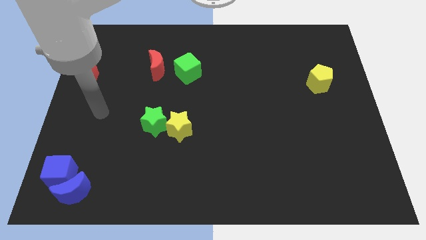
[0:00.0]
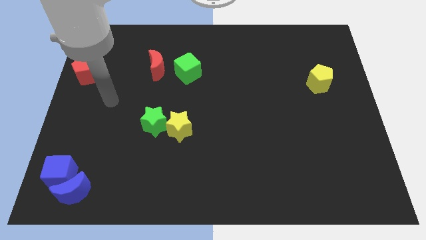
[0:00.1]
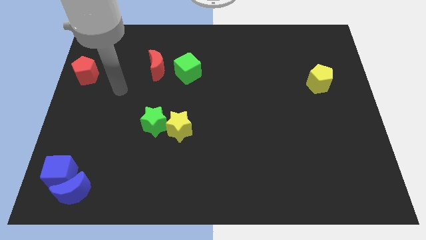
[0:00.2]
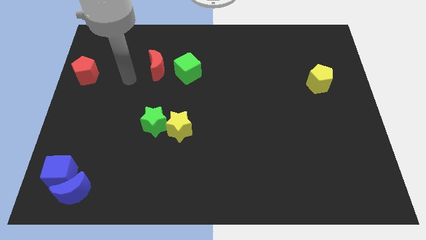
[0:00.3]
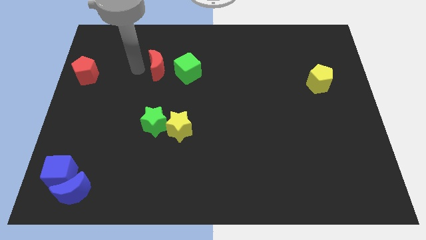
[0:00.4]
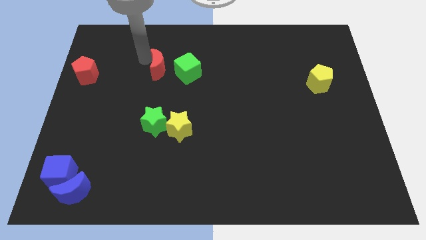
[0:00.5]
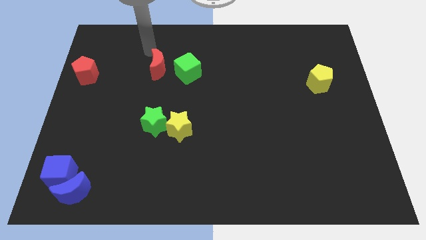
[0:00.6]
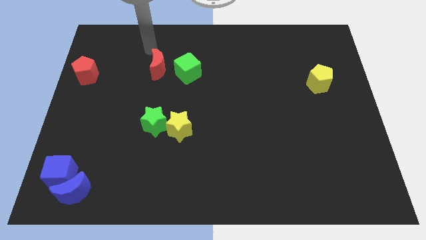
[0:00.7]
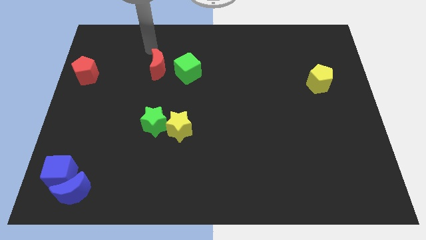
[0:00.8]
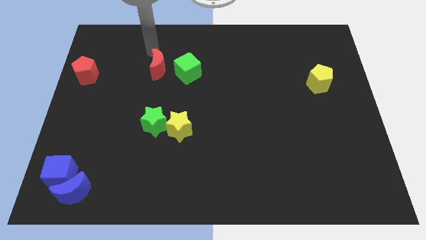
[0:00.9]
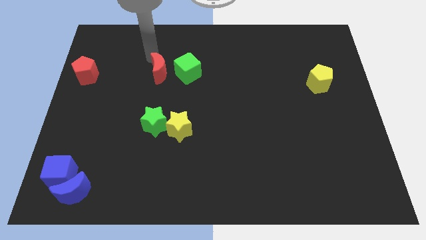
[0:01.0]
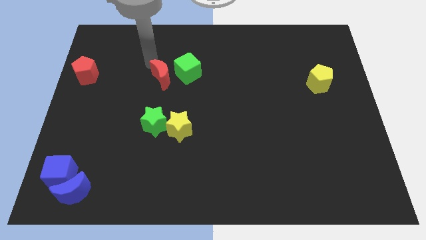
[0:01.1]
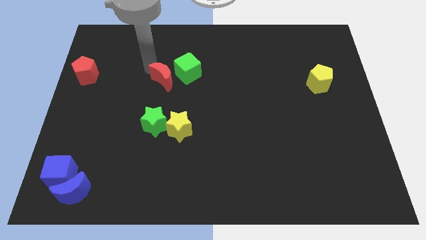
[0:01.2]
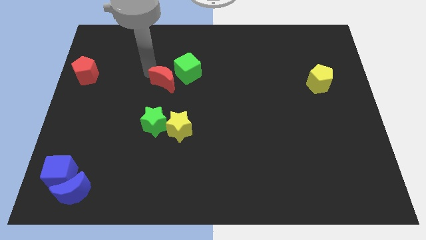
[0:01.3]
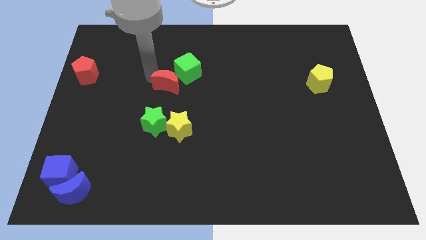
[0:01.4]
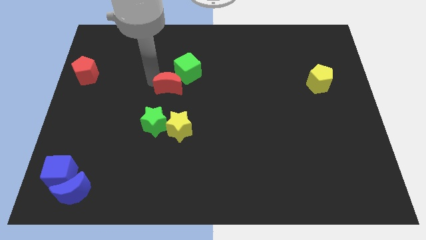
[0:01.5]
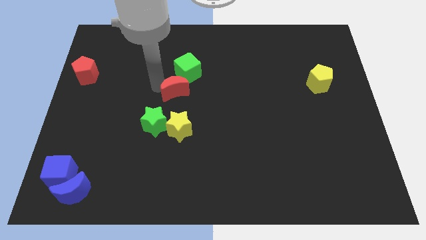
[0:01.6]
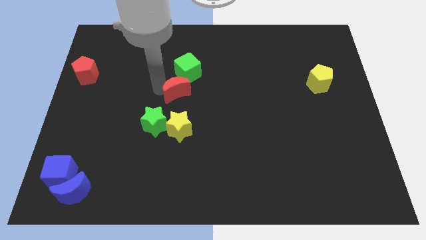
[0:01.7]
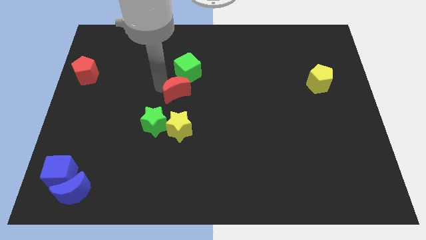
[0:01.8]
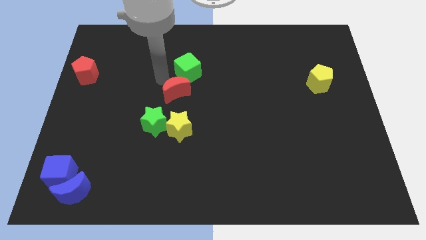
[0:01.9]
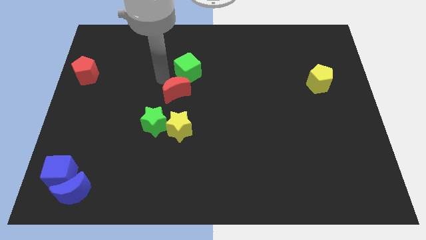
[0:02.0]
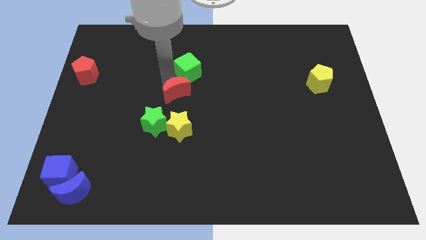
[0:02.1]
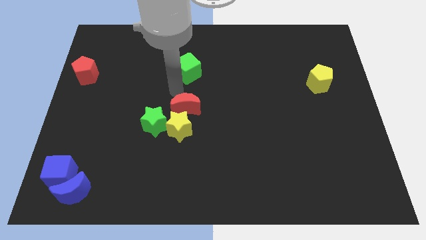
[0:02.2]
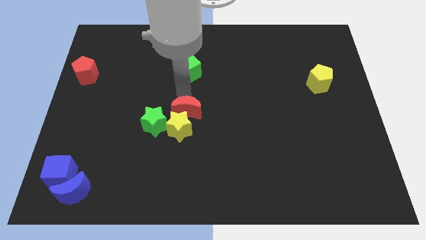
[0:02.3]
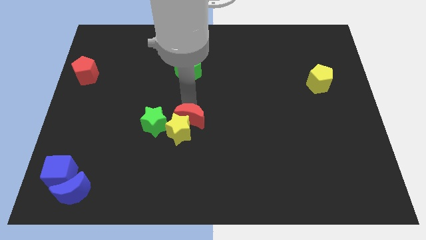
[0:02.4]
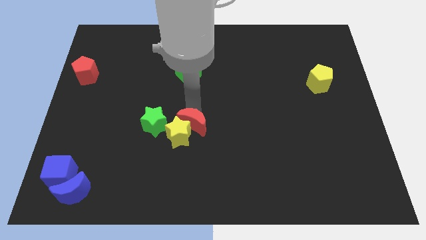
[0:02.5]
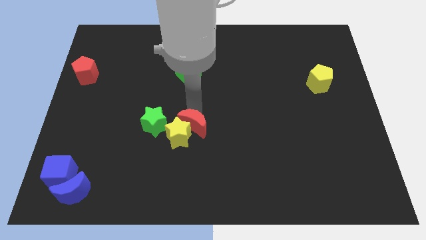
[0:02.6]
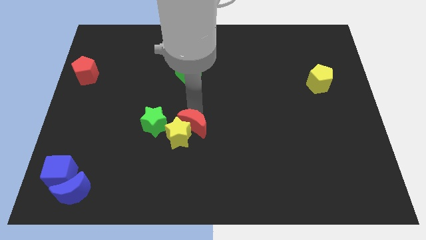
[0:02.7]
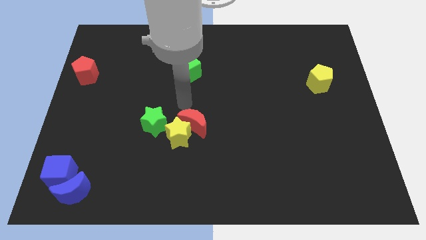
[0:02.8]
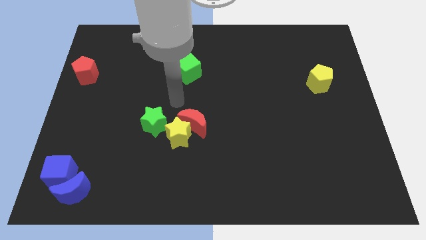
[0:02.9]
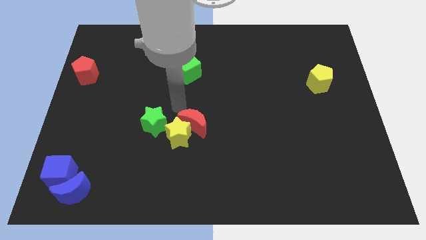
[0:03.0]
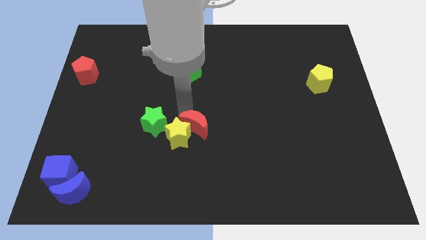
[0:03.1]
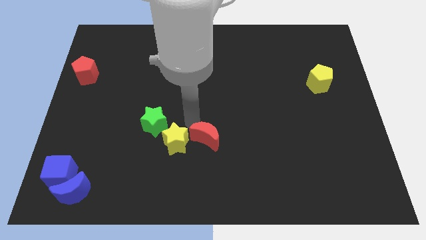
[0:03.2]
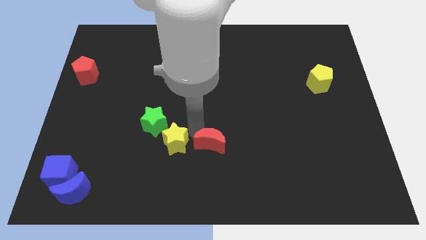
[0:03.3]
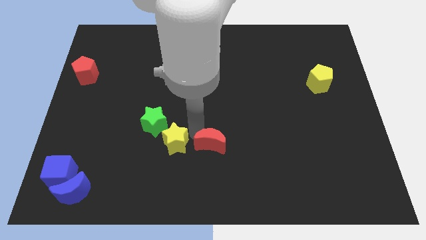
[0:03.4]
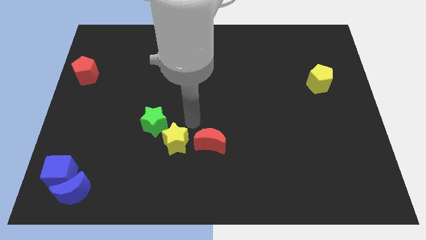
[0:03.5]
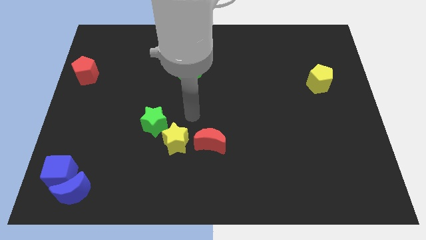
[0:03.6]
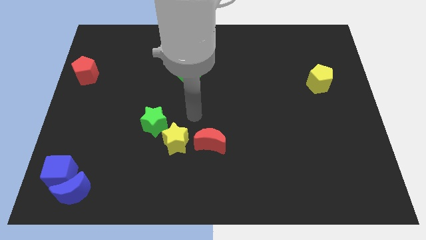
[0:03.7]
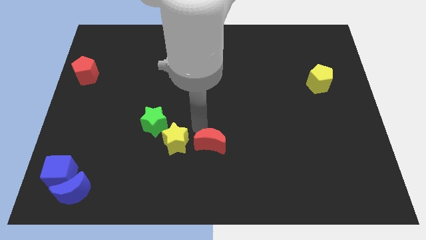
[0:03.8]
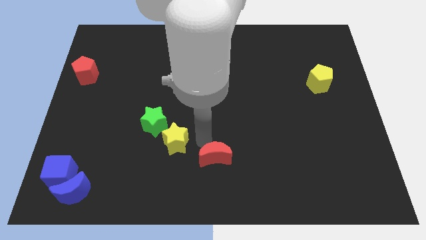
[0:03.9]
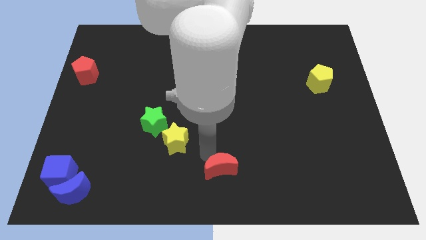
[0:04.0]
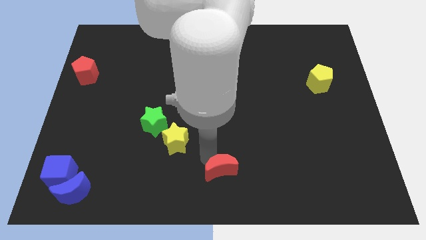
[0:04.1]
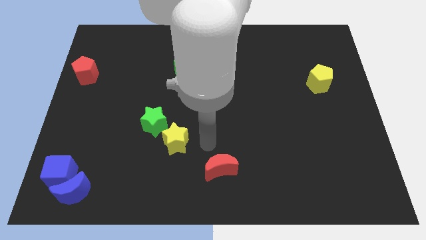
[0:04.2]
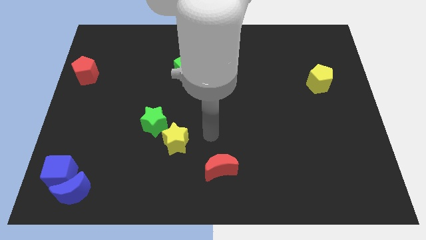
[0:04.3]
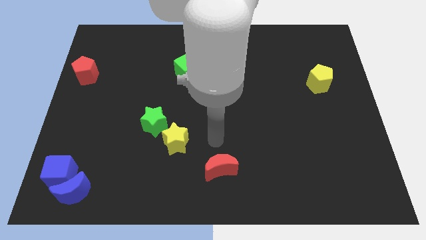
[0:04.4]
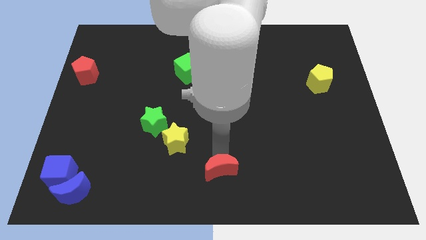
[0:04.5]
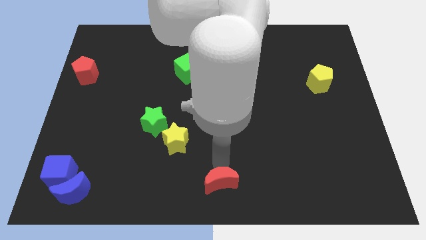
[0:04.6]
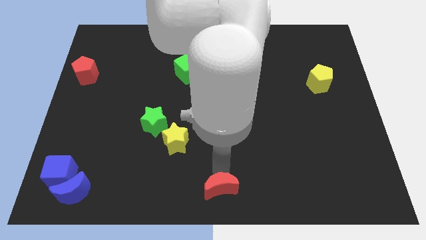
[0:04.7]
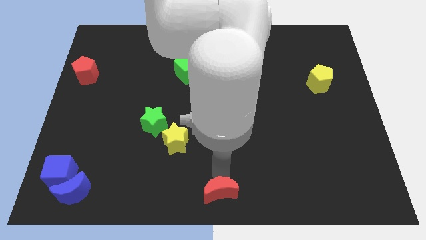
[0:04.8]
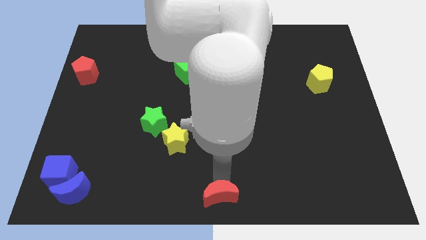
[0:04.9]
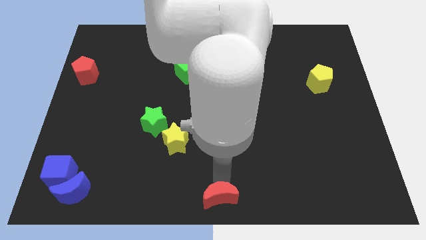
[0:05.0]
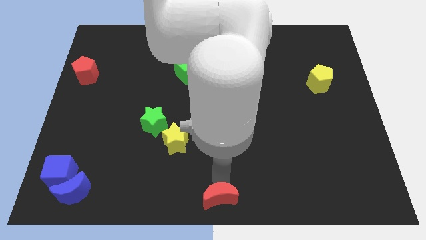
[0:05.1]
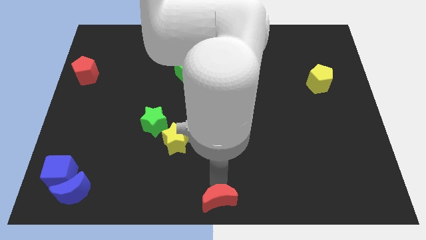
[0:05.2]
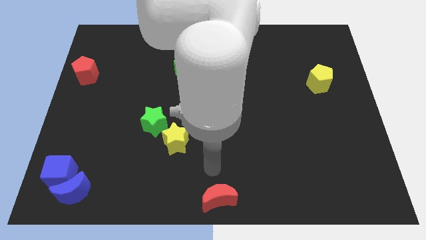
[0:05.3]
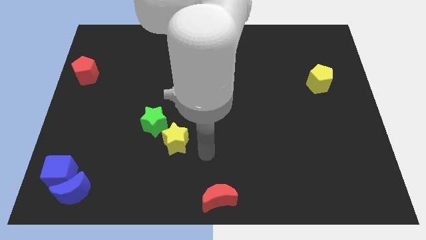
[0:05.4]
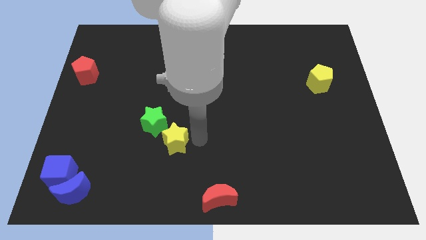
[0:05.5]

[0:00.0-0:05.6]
slide the red crescent to the bottom center of the board

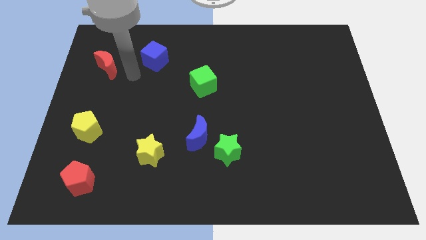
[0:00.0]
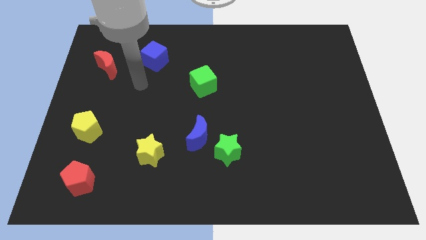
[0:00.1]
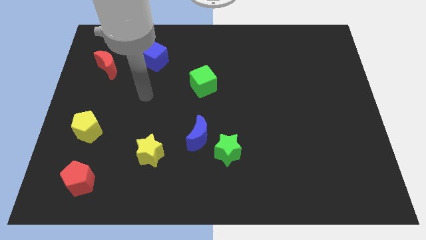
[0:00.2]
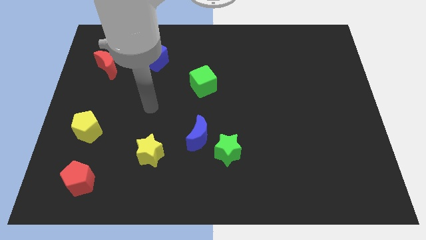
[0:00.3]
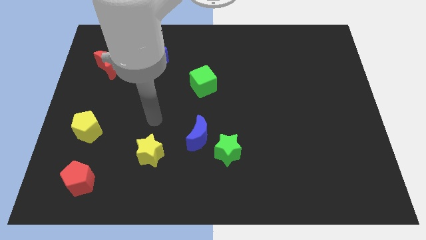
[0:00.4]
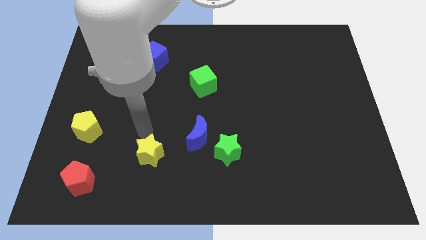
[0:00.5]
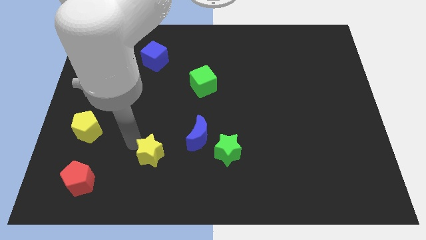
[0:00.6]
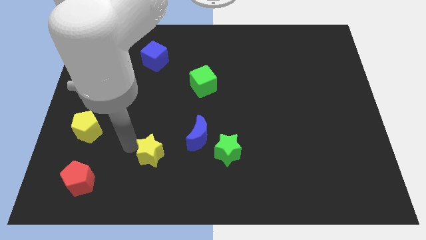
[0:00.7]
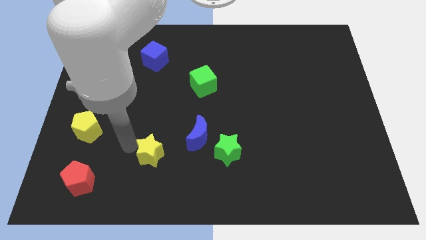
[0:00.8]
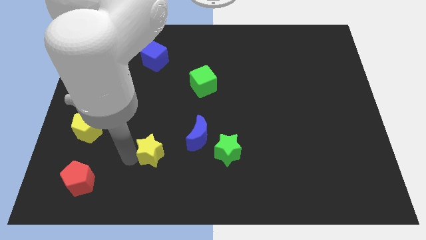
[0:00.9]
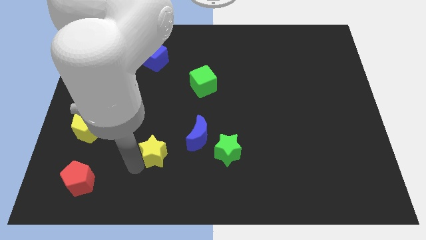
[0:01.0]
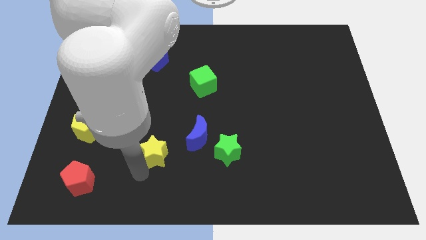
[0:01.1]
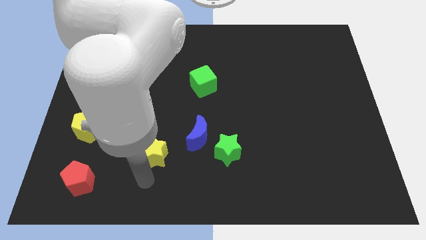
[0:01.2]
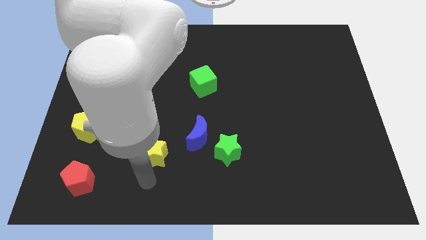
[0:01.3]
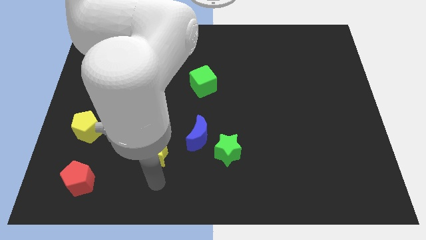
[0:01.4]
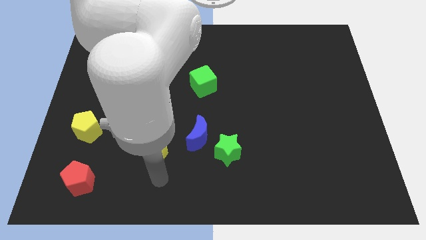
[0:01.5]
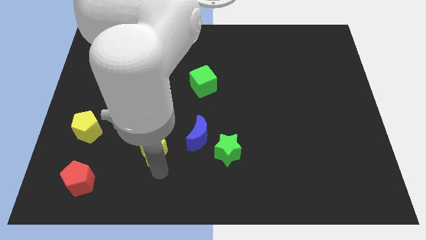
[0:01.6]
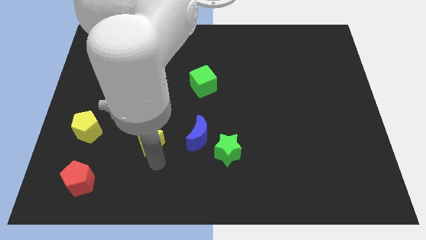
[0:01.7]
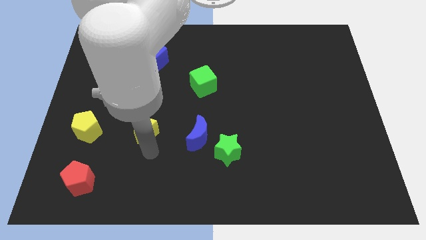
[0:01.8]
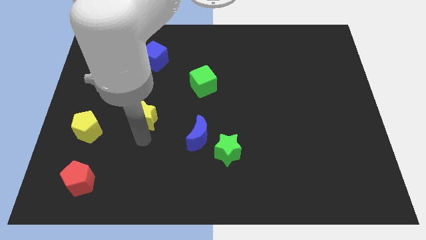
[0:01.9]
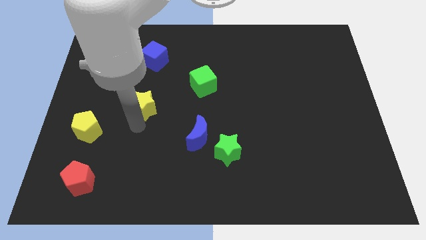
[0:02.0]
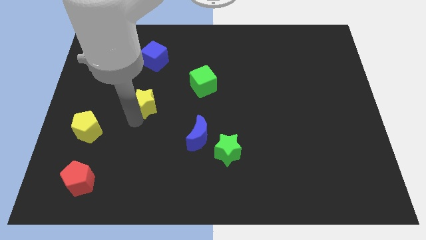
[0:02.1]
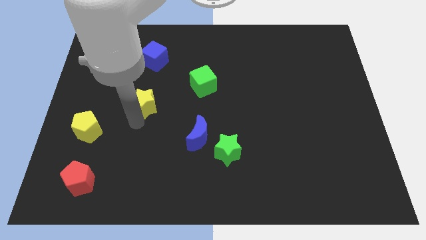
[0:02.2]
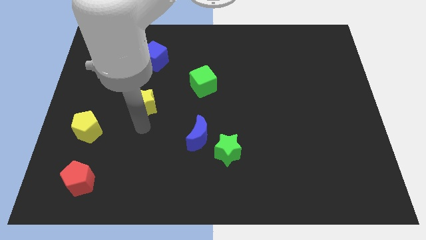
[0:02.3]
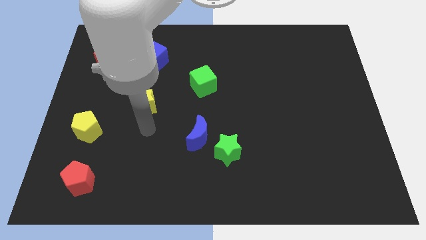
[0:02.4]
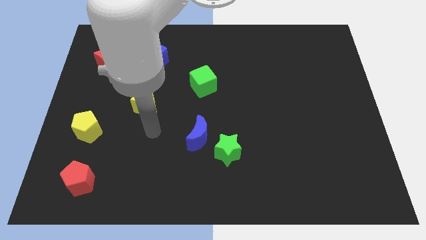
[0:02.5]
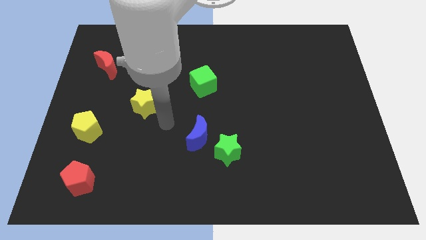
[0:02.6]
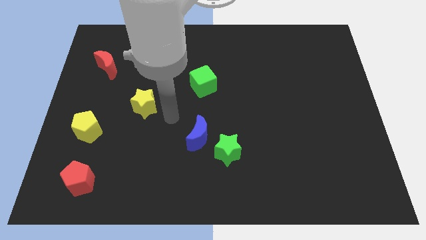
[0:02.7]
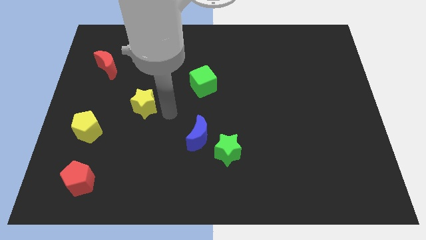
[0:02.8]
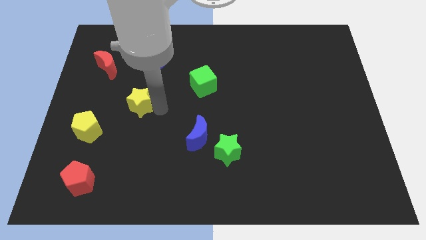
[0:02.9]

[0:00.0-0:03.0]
place the yellow star in between the green cube and the yellow pentagon

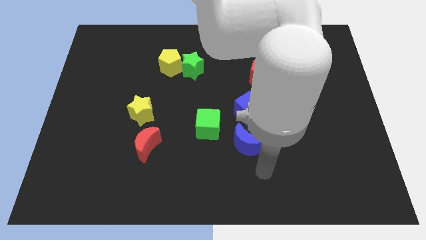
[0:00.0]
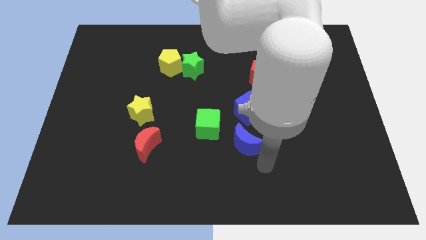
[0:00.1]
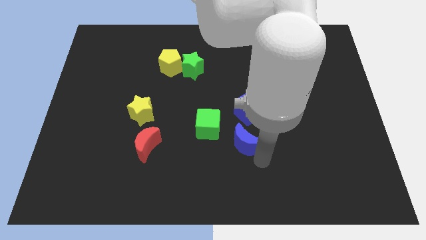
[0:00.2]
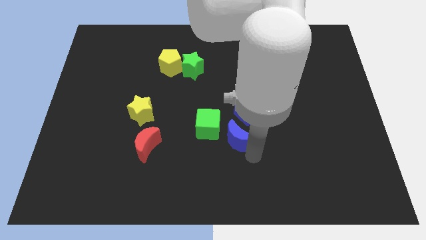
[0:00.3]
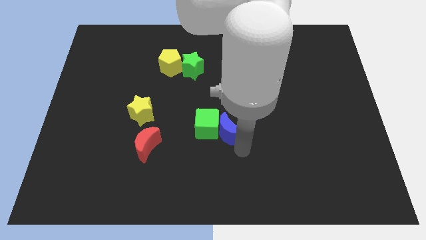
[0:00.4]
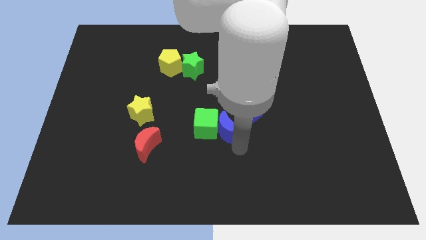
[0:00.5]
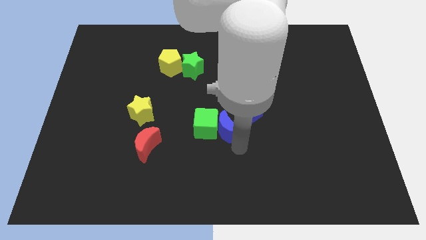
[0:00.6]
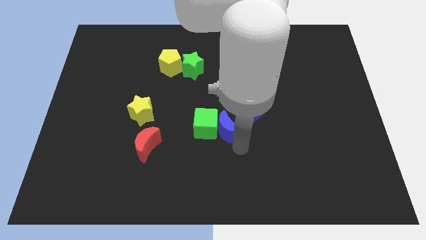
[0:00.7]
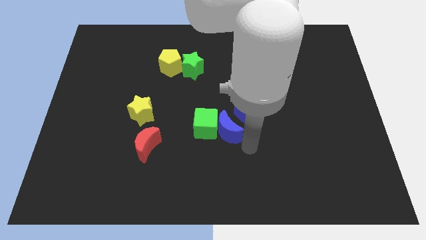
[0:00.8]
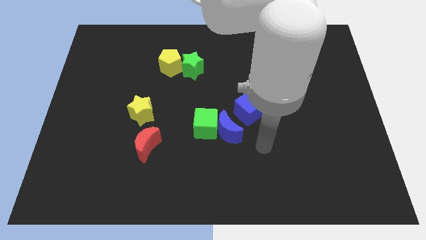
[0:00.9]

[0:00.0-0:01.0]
make the blue crescent to touch the right of the green cube
